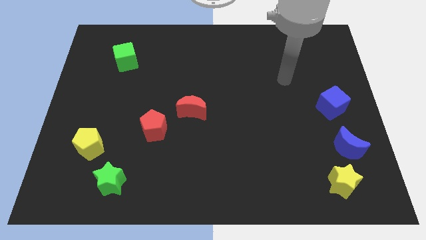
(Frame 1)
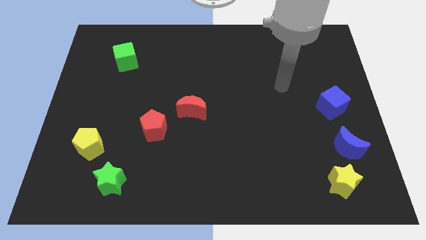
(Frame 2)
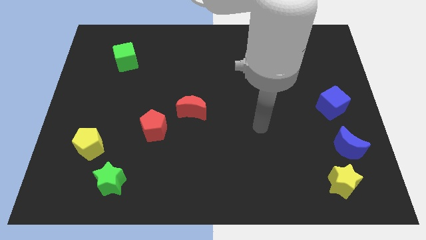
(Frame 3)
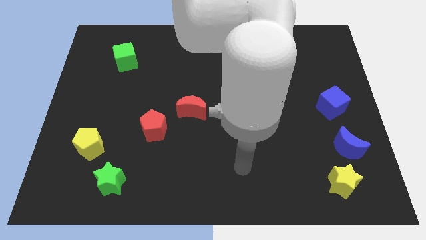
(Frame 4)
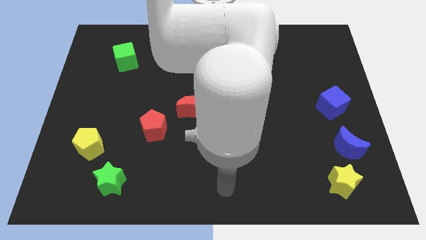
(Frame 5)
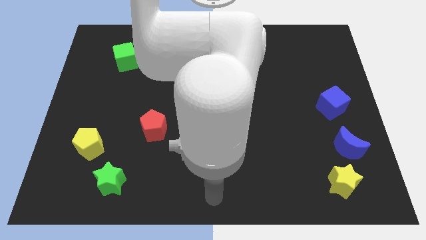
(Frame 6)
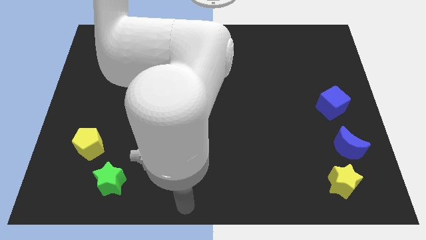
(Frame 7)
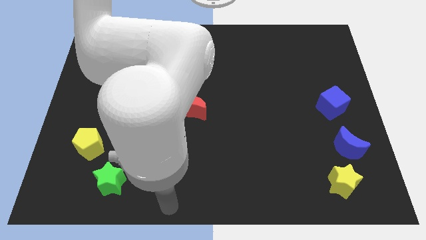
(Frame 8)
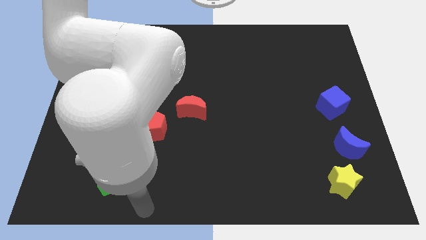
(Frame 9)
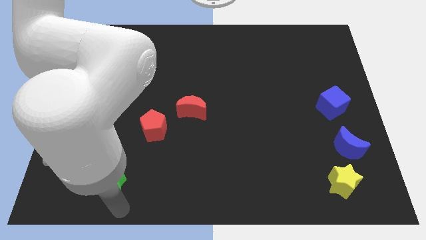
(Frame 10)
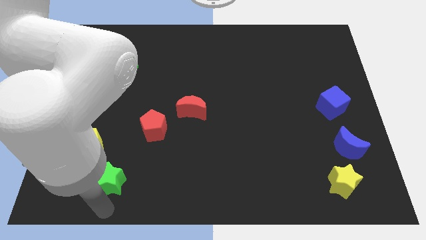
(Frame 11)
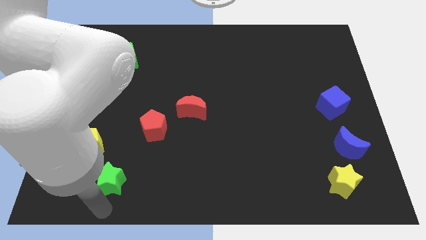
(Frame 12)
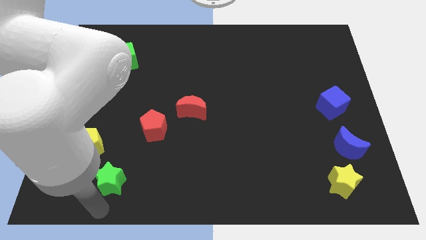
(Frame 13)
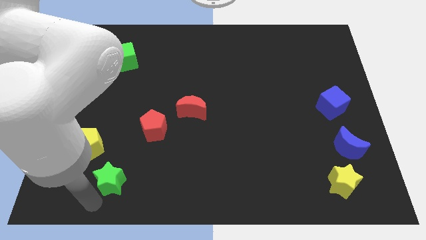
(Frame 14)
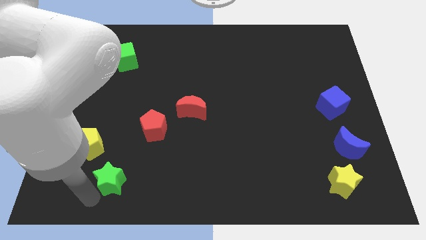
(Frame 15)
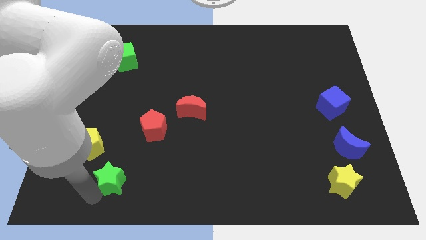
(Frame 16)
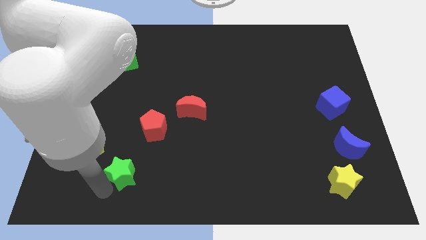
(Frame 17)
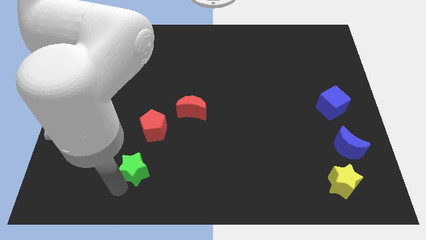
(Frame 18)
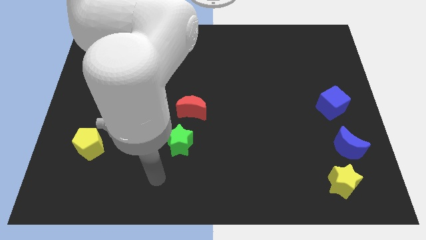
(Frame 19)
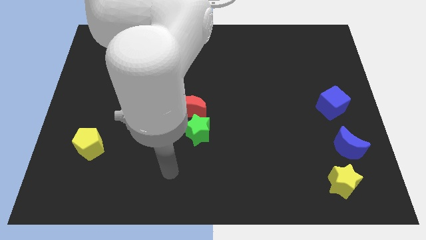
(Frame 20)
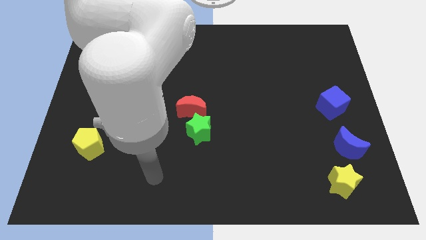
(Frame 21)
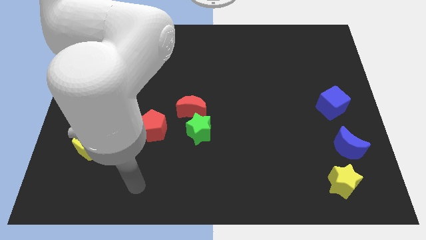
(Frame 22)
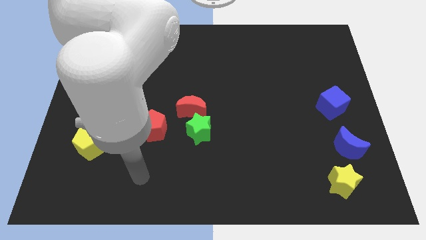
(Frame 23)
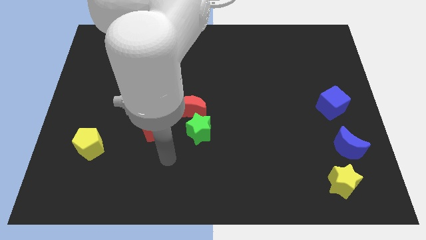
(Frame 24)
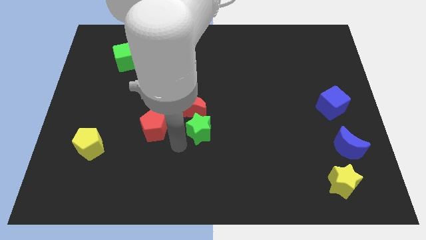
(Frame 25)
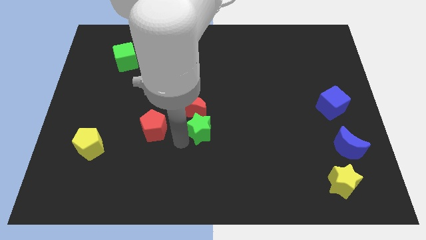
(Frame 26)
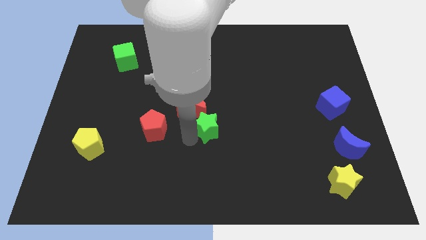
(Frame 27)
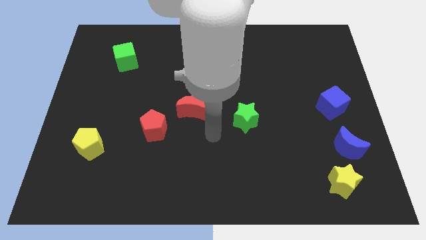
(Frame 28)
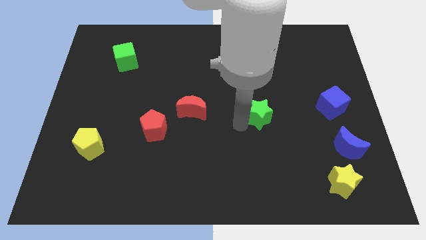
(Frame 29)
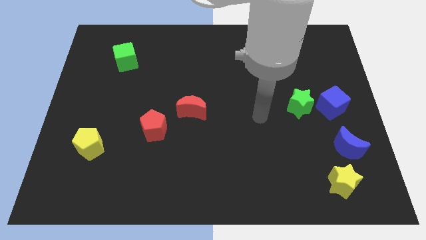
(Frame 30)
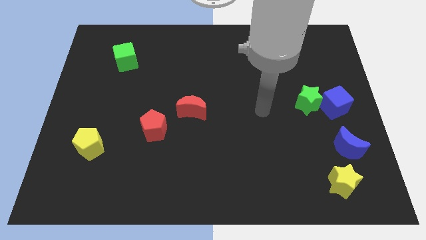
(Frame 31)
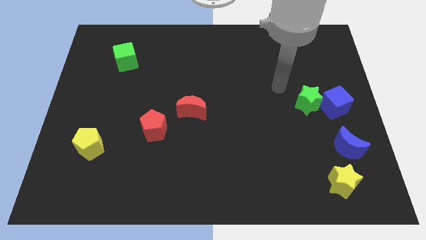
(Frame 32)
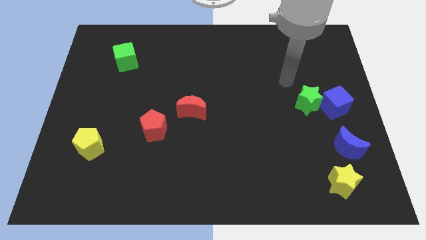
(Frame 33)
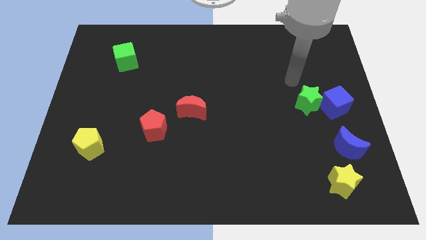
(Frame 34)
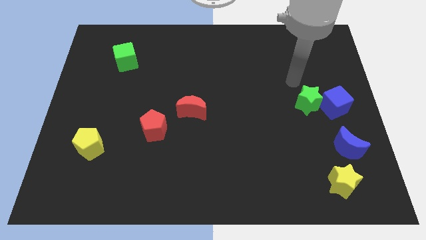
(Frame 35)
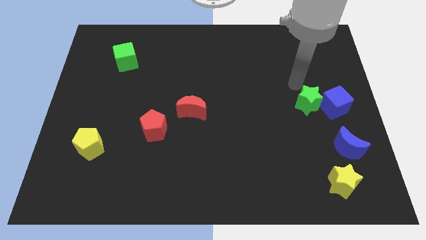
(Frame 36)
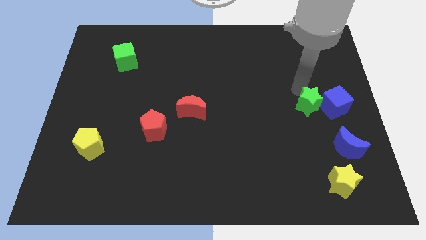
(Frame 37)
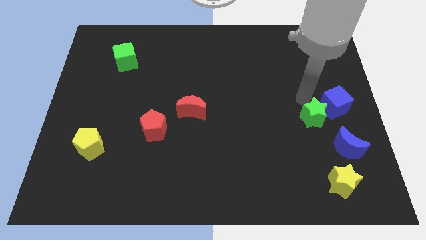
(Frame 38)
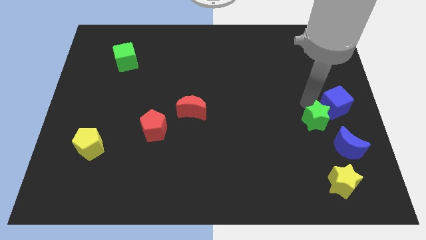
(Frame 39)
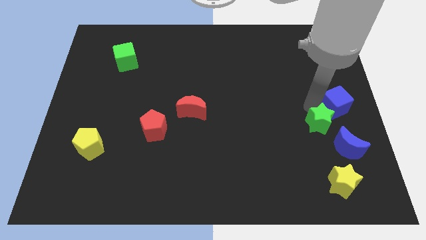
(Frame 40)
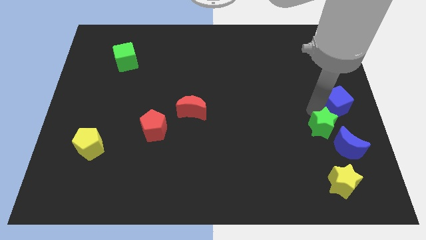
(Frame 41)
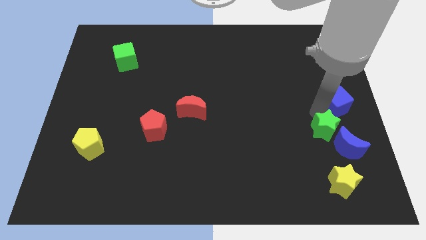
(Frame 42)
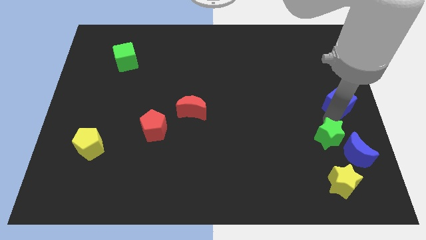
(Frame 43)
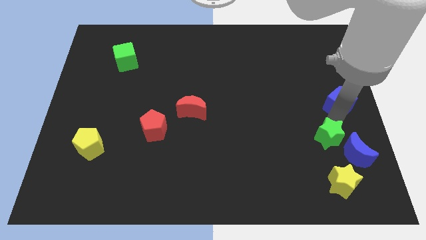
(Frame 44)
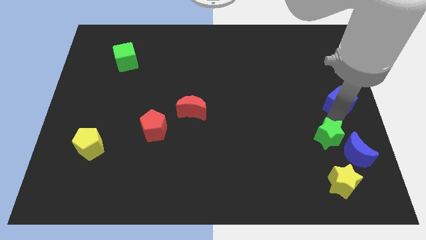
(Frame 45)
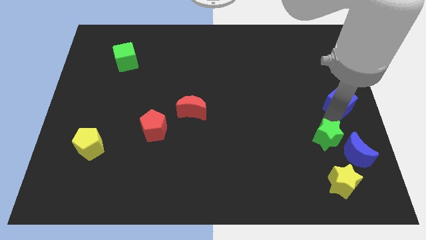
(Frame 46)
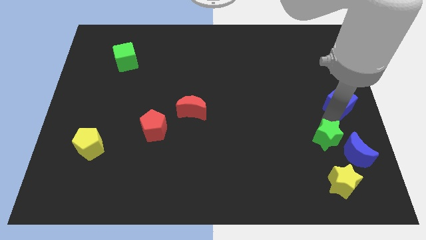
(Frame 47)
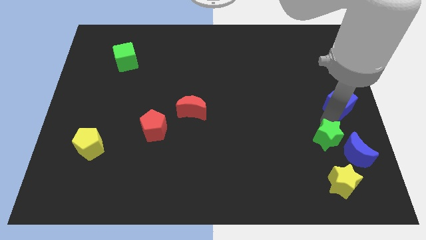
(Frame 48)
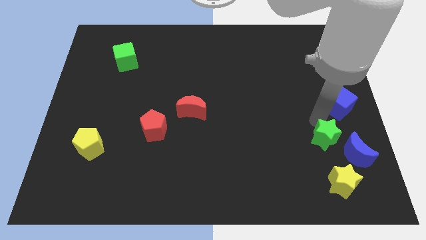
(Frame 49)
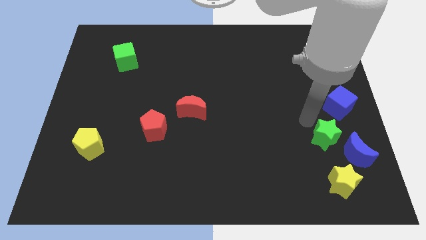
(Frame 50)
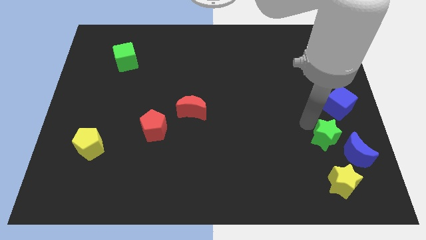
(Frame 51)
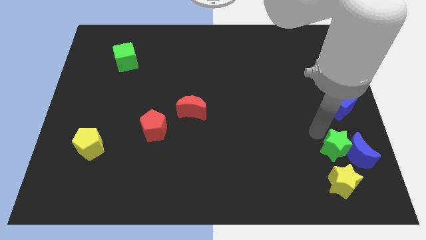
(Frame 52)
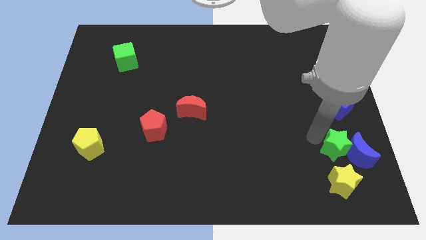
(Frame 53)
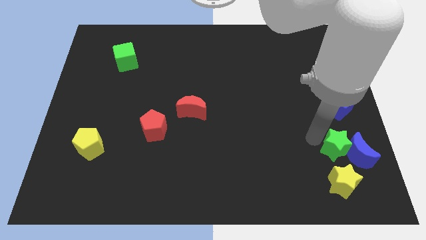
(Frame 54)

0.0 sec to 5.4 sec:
slide the green star next to the blue moon

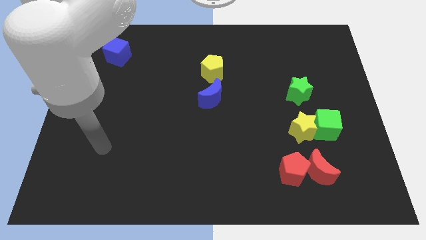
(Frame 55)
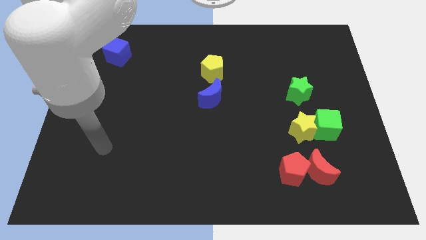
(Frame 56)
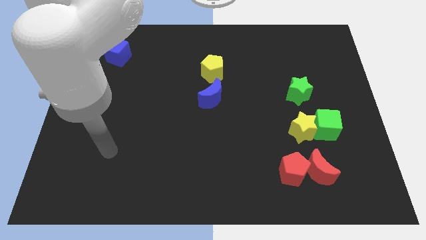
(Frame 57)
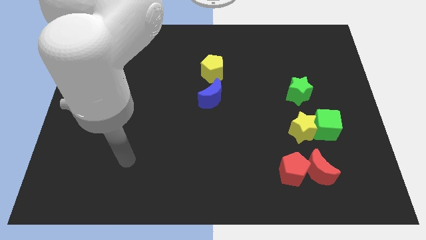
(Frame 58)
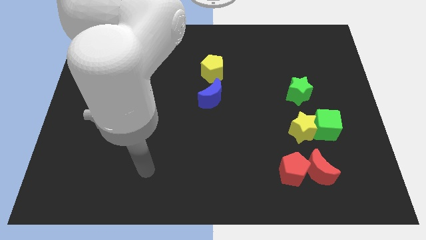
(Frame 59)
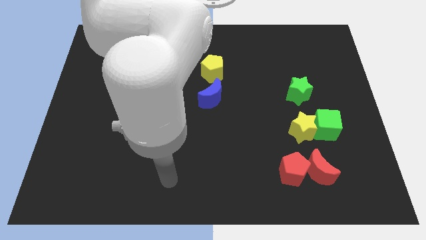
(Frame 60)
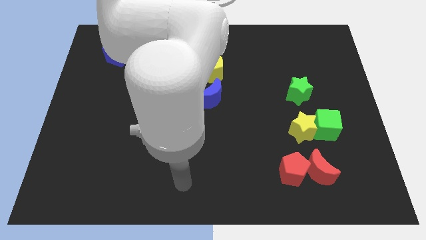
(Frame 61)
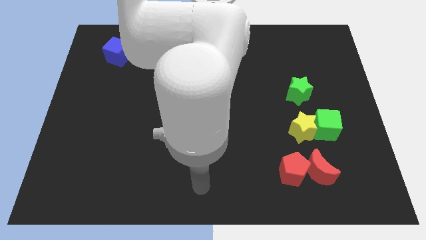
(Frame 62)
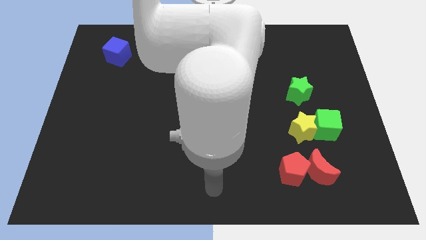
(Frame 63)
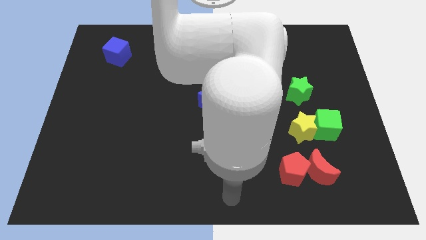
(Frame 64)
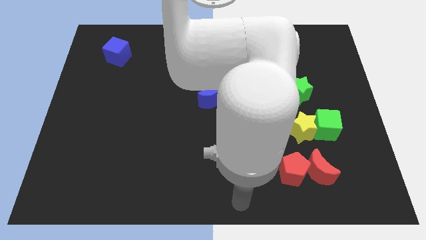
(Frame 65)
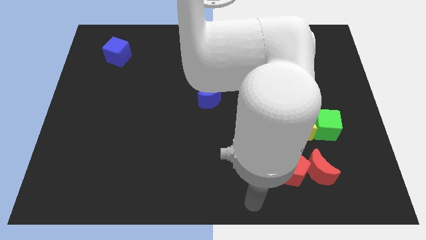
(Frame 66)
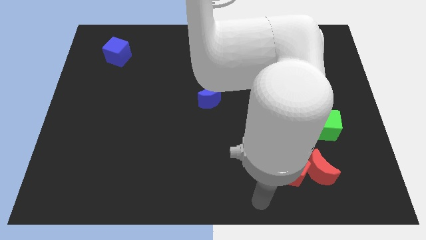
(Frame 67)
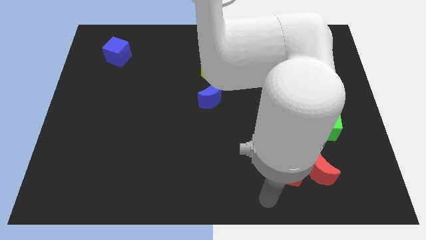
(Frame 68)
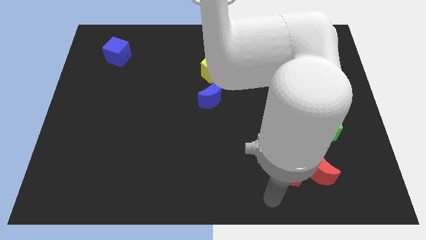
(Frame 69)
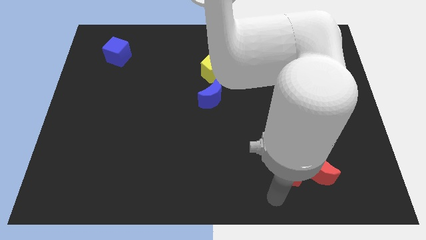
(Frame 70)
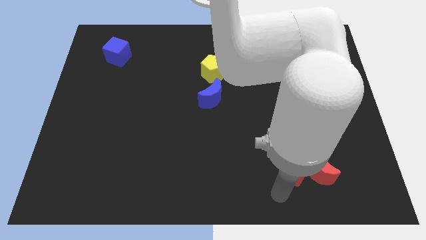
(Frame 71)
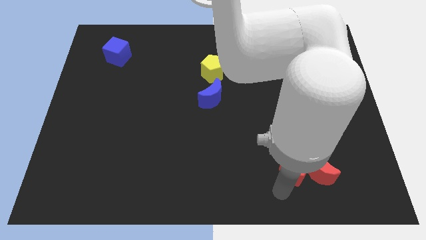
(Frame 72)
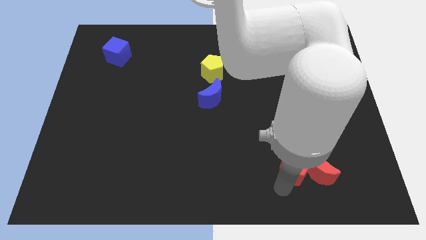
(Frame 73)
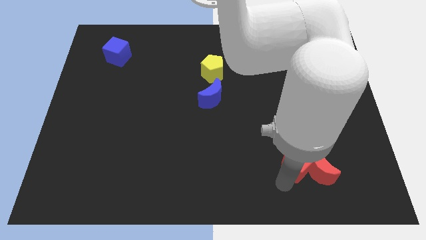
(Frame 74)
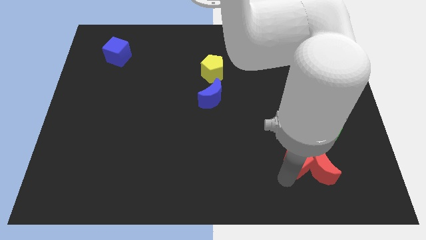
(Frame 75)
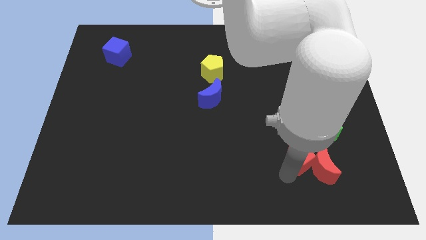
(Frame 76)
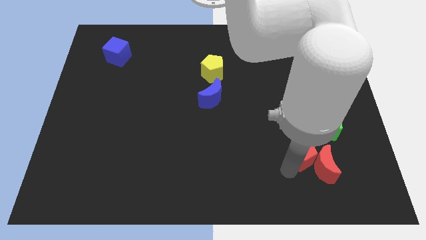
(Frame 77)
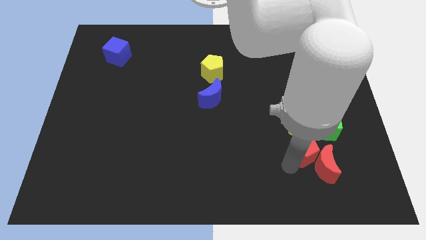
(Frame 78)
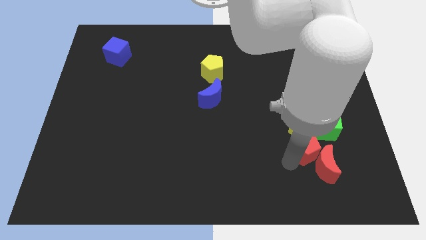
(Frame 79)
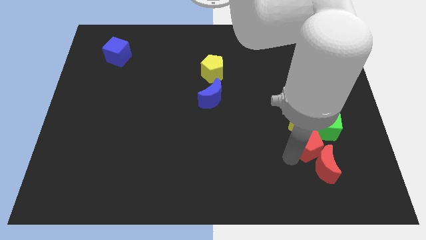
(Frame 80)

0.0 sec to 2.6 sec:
put the red pentagon next to the yellow star

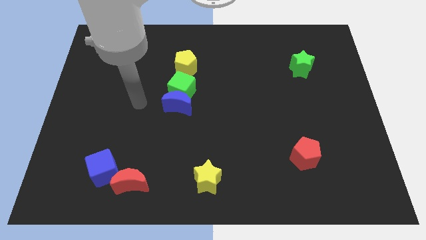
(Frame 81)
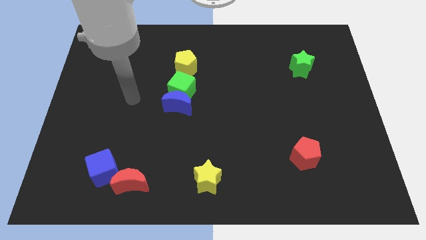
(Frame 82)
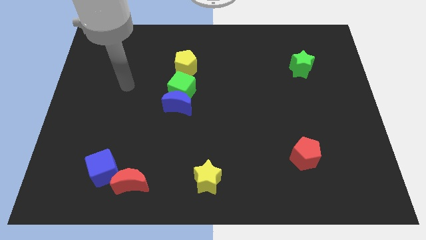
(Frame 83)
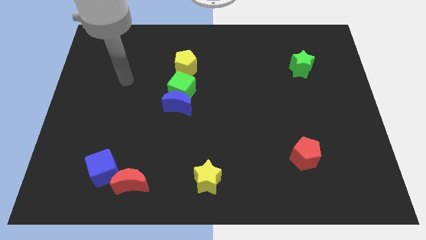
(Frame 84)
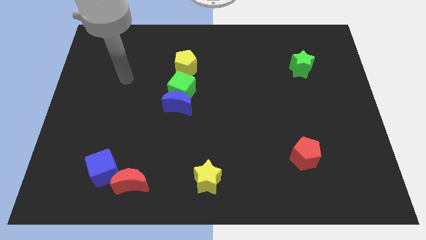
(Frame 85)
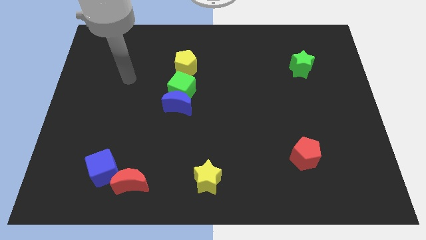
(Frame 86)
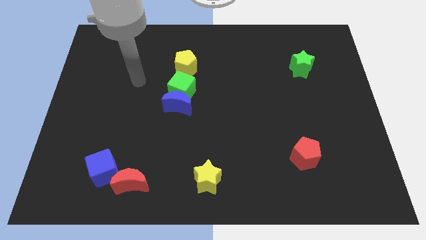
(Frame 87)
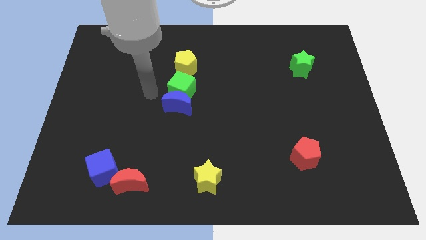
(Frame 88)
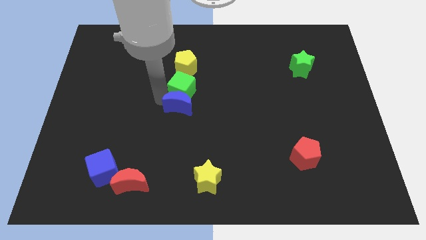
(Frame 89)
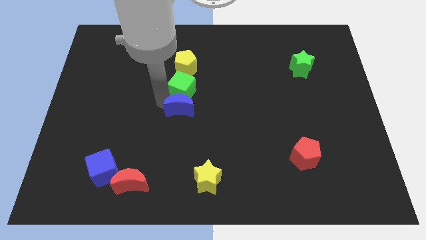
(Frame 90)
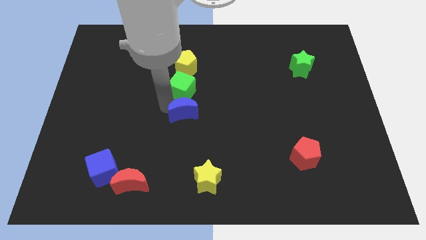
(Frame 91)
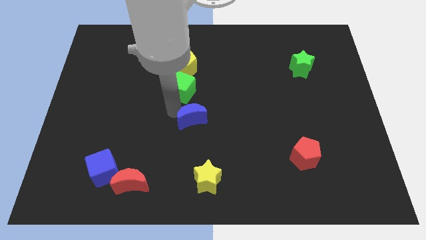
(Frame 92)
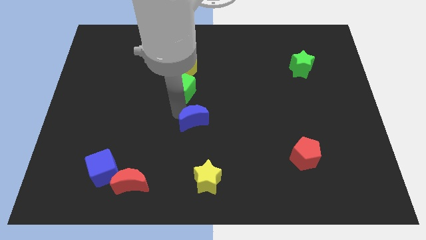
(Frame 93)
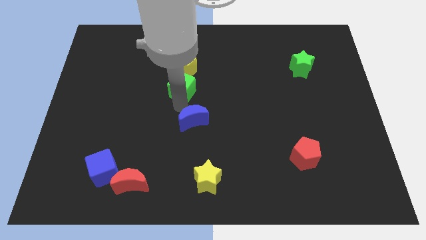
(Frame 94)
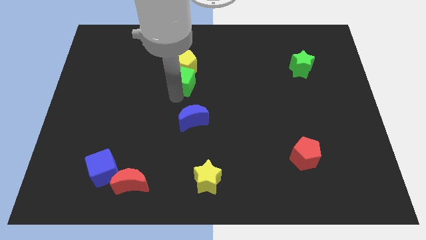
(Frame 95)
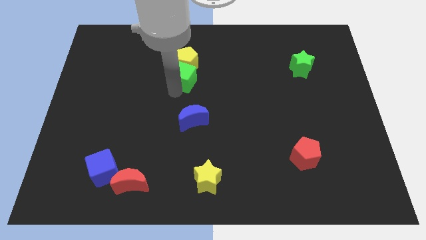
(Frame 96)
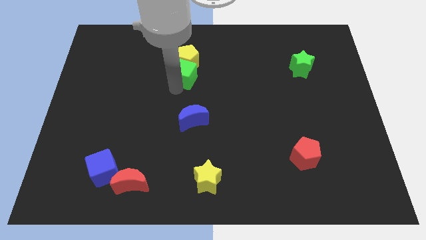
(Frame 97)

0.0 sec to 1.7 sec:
slide the green cube next to the yellow pentagon
